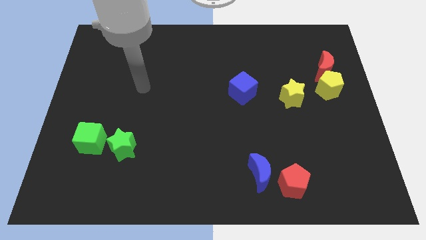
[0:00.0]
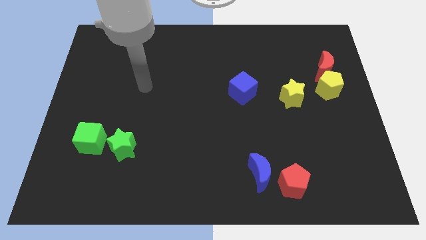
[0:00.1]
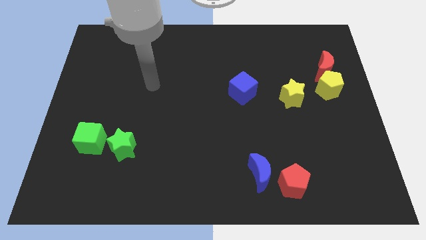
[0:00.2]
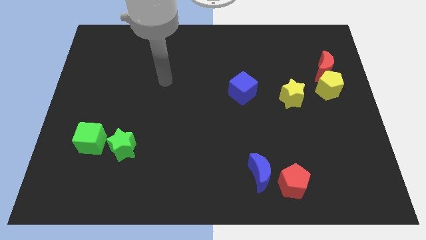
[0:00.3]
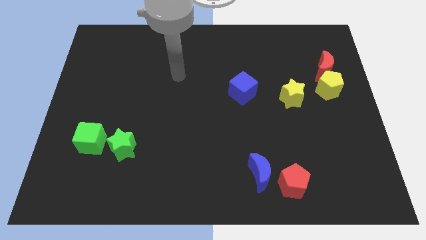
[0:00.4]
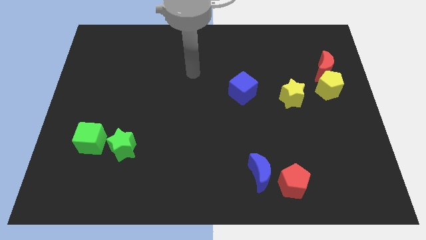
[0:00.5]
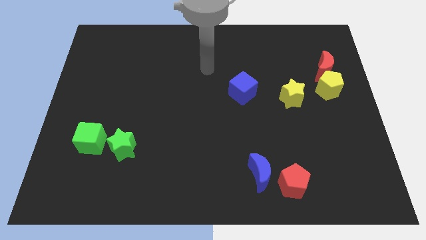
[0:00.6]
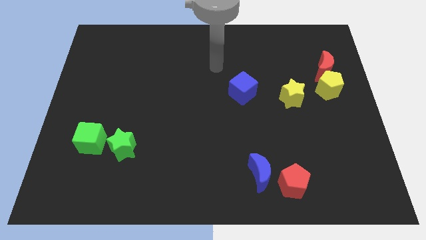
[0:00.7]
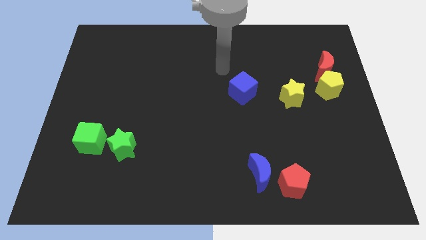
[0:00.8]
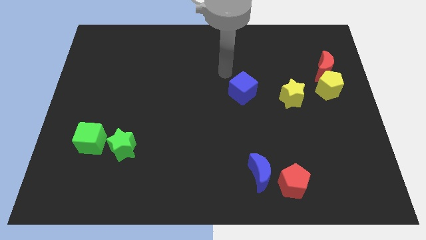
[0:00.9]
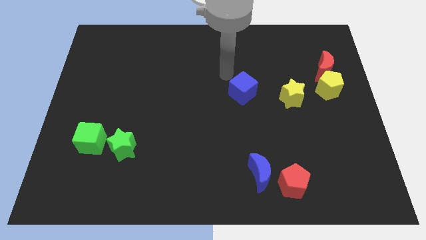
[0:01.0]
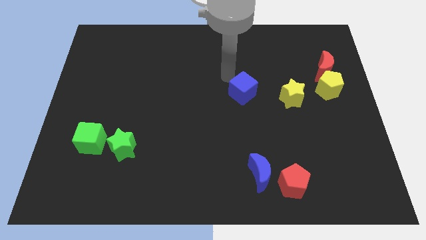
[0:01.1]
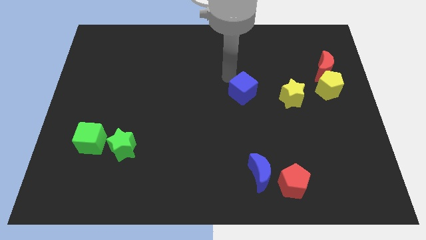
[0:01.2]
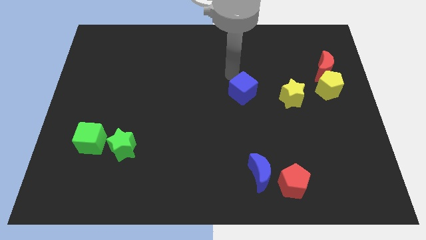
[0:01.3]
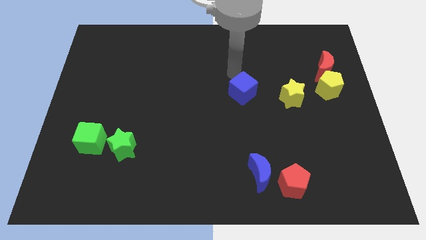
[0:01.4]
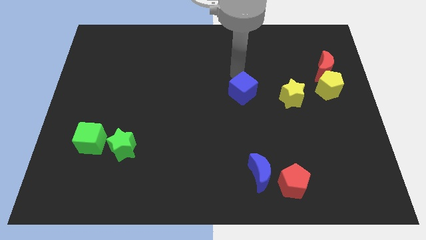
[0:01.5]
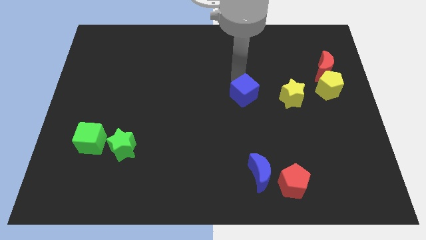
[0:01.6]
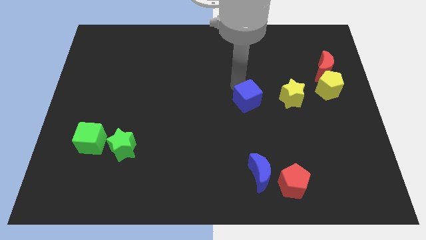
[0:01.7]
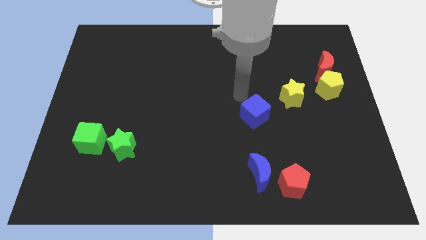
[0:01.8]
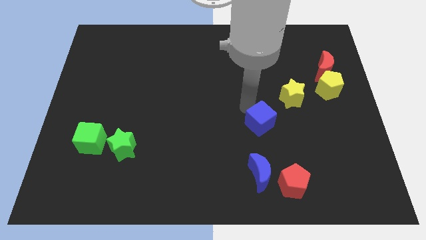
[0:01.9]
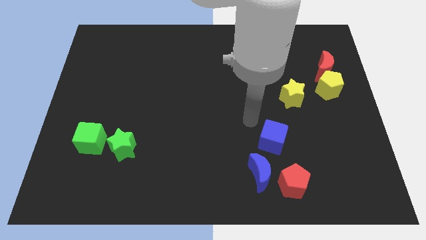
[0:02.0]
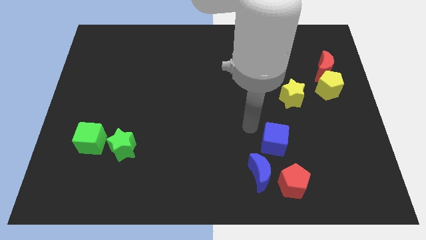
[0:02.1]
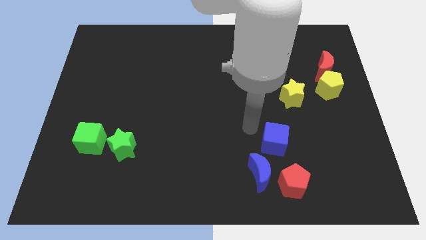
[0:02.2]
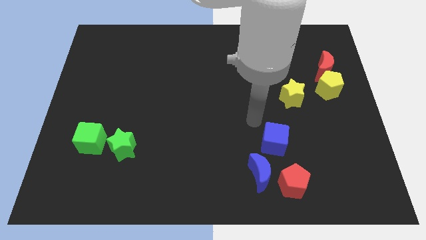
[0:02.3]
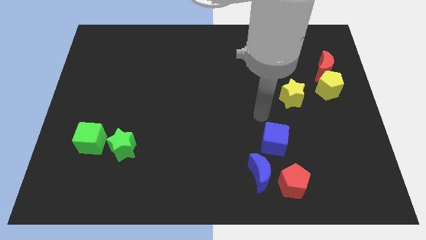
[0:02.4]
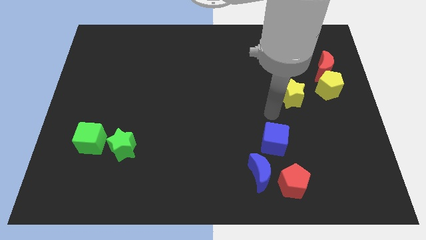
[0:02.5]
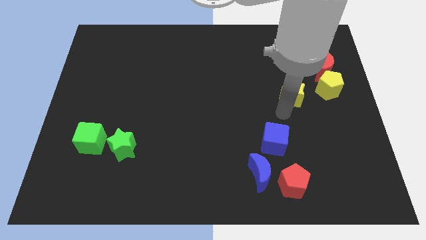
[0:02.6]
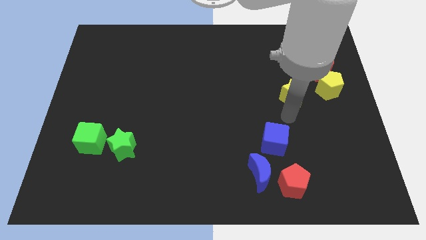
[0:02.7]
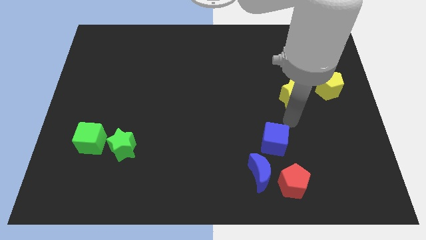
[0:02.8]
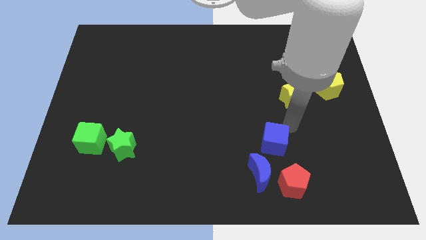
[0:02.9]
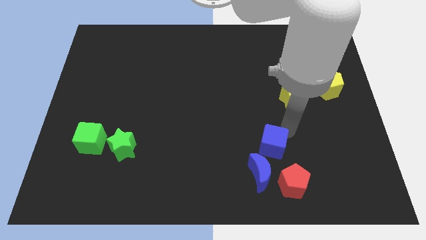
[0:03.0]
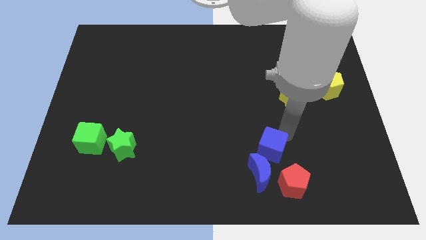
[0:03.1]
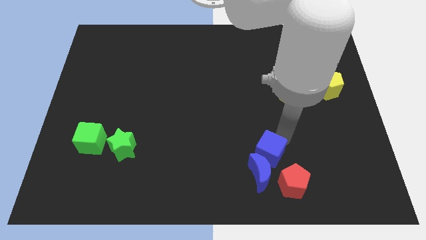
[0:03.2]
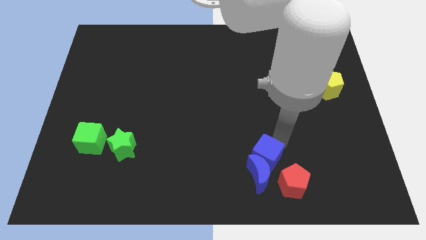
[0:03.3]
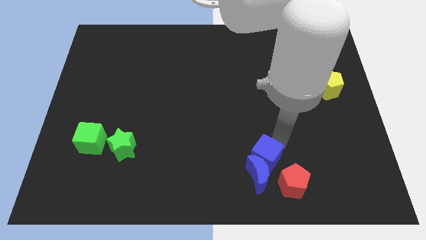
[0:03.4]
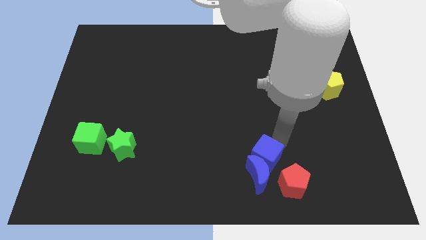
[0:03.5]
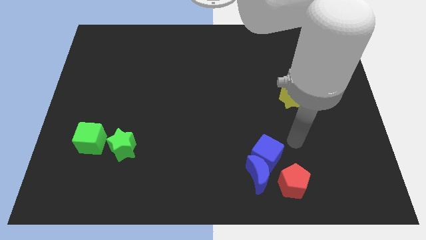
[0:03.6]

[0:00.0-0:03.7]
move blue cube into the blue moon

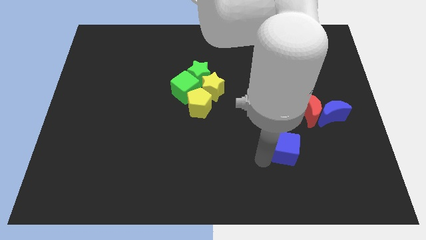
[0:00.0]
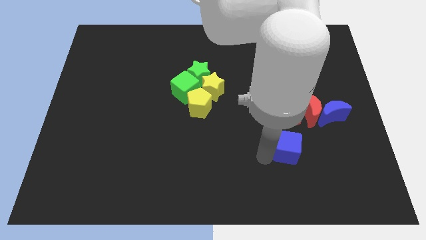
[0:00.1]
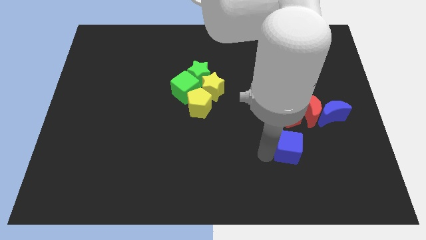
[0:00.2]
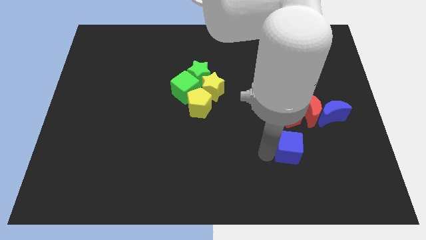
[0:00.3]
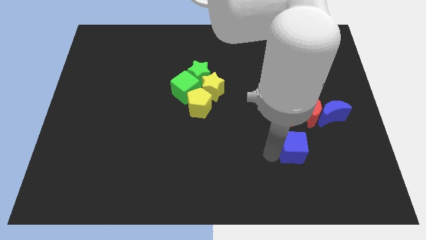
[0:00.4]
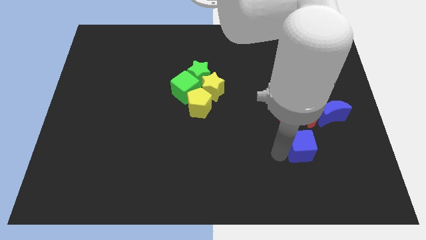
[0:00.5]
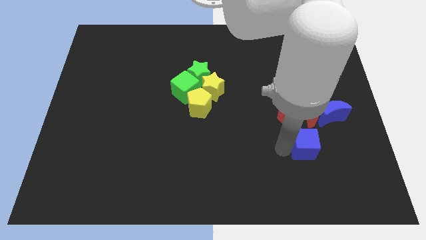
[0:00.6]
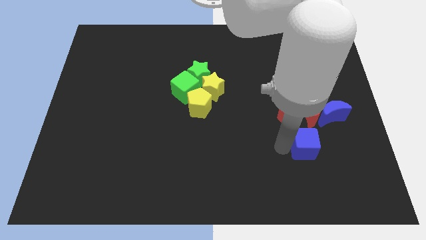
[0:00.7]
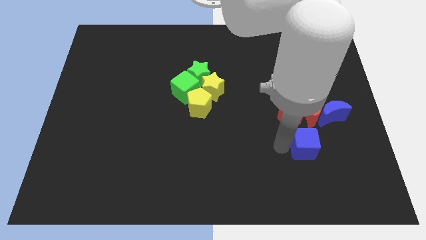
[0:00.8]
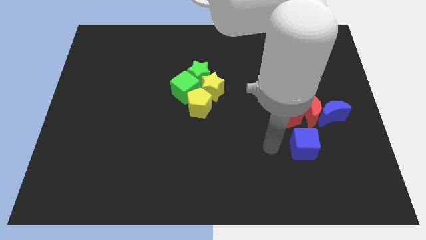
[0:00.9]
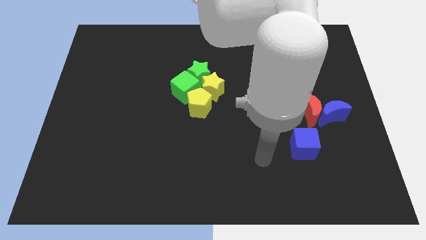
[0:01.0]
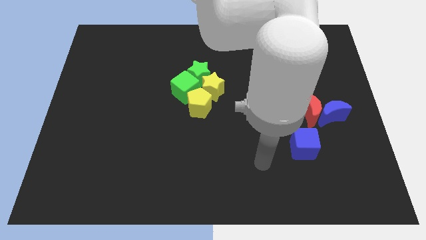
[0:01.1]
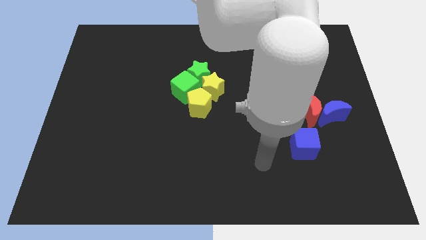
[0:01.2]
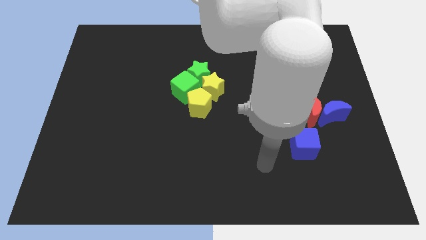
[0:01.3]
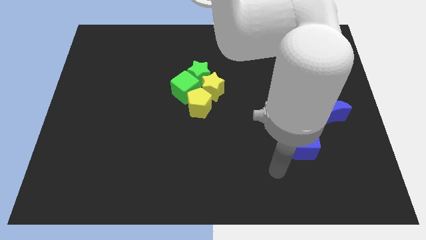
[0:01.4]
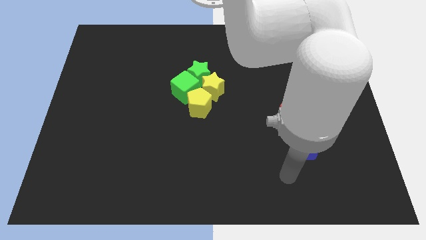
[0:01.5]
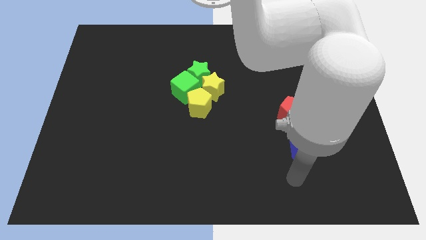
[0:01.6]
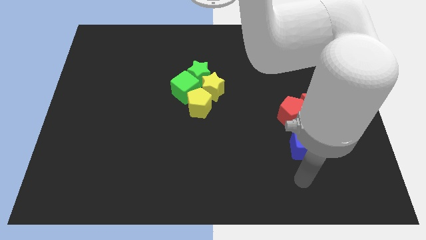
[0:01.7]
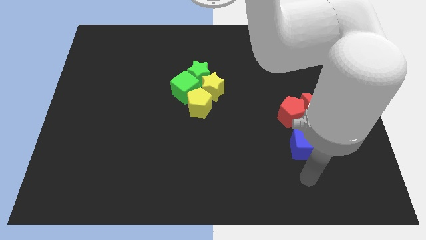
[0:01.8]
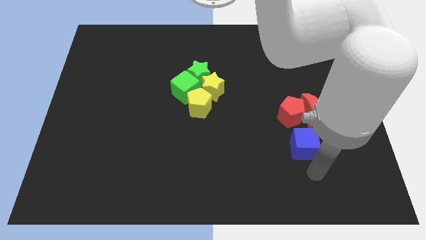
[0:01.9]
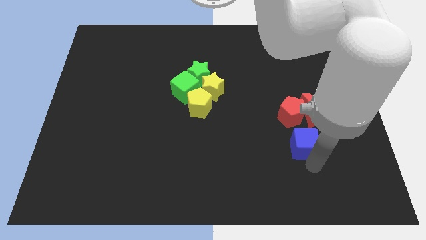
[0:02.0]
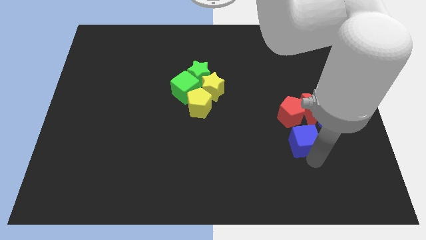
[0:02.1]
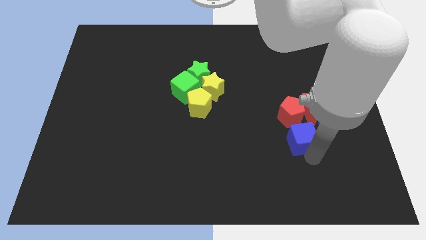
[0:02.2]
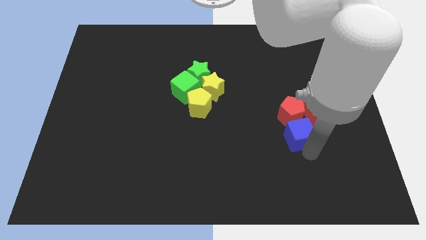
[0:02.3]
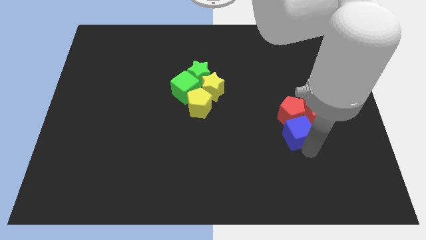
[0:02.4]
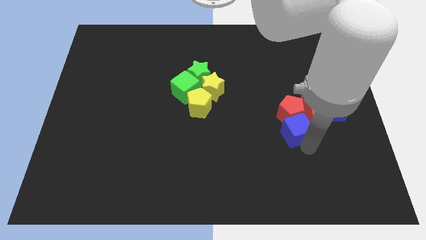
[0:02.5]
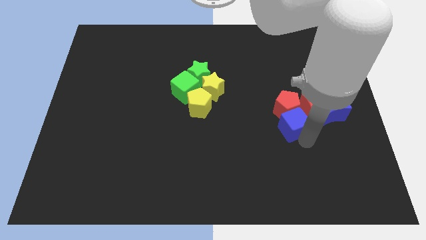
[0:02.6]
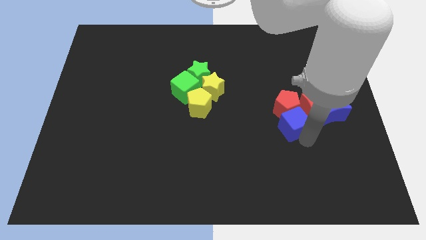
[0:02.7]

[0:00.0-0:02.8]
push the blue cube into the red pentagon with group of red and blue blocks

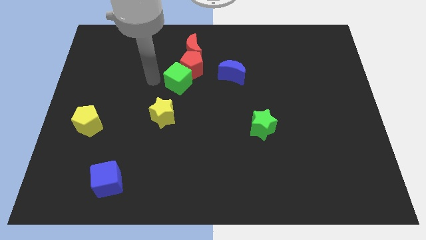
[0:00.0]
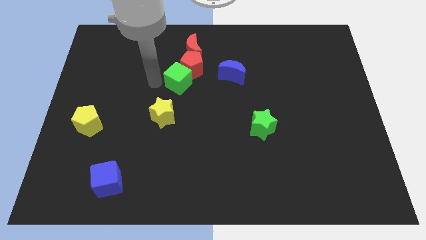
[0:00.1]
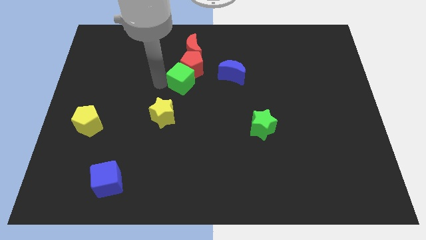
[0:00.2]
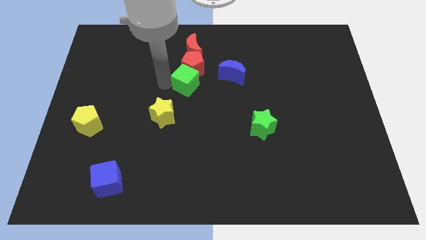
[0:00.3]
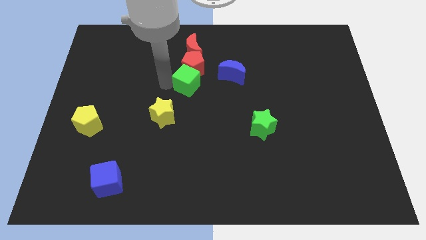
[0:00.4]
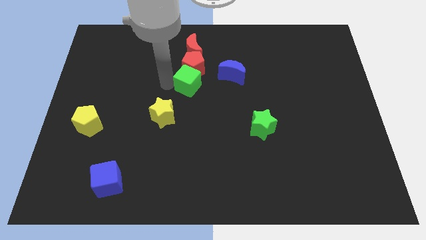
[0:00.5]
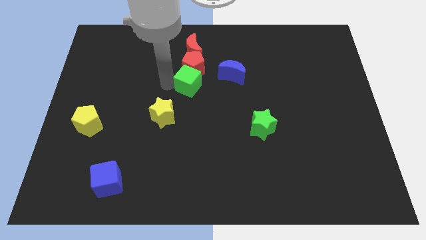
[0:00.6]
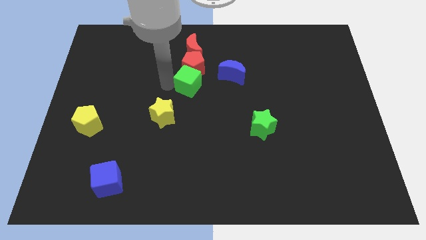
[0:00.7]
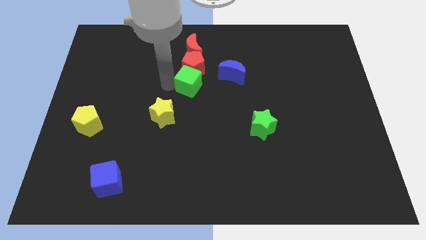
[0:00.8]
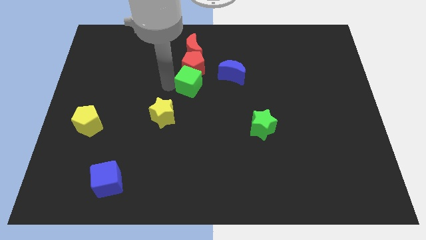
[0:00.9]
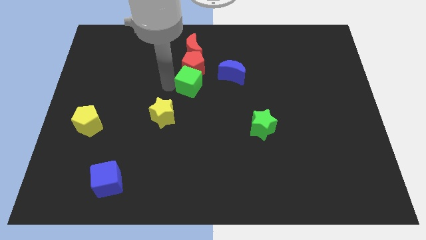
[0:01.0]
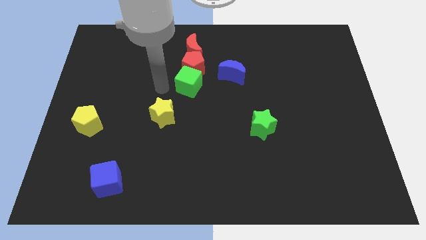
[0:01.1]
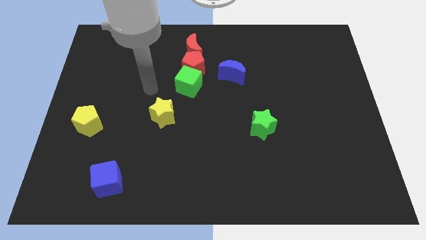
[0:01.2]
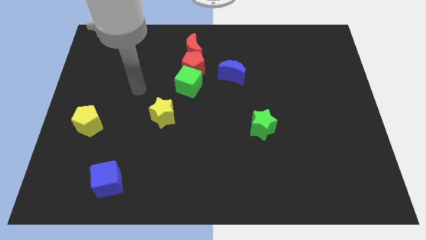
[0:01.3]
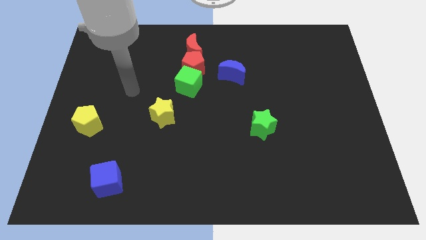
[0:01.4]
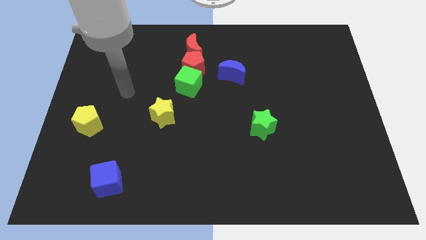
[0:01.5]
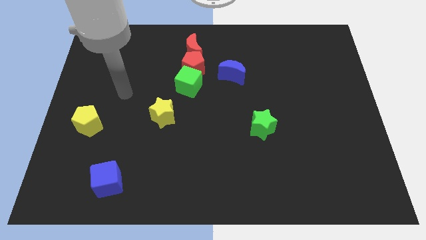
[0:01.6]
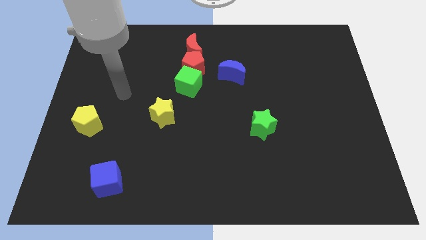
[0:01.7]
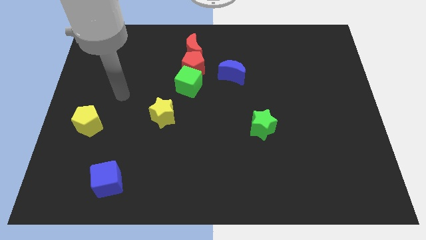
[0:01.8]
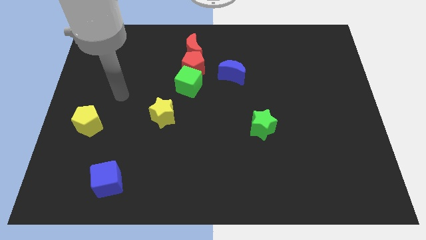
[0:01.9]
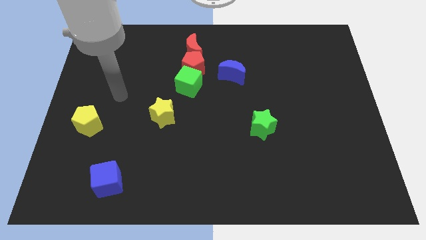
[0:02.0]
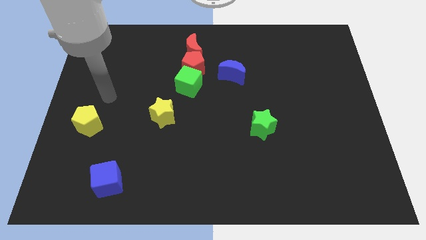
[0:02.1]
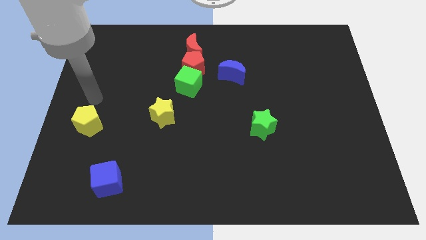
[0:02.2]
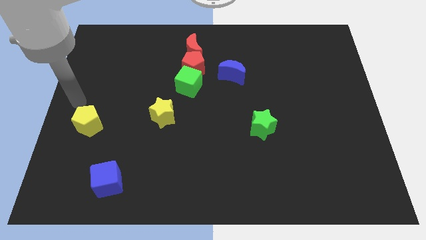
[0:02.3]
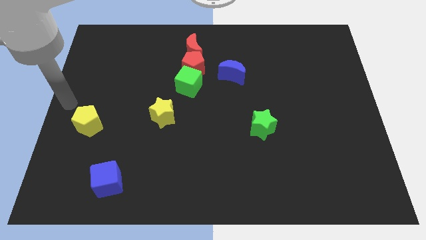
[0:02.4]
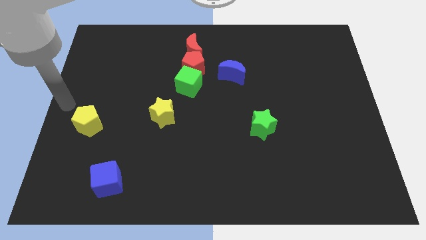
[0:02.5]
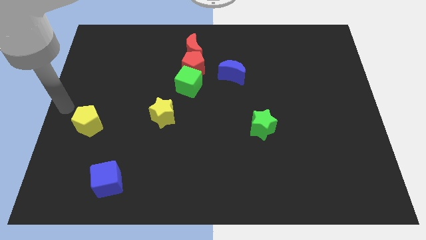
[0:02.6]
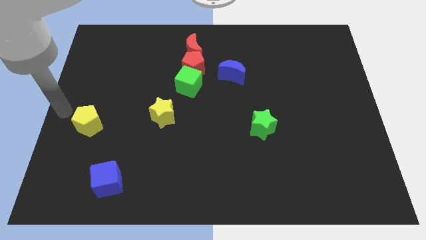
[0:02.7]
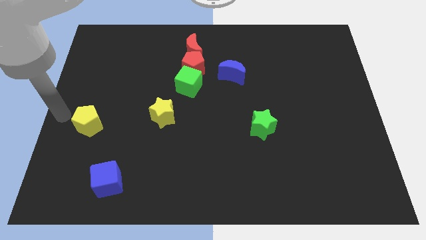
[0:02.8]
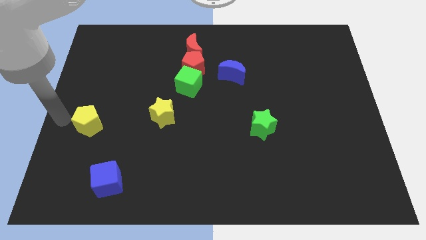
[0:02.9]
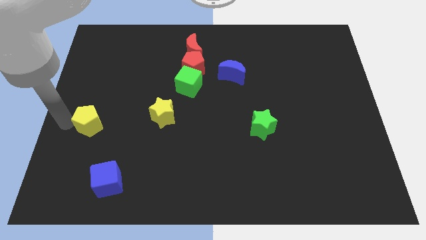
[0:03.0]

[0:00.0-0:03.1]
place the arm left to the yellow pentagon
